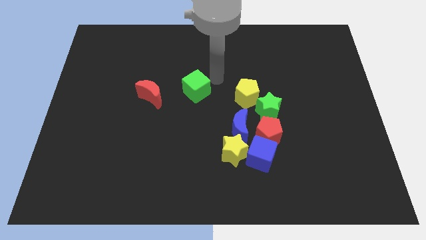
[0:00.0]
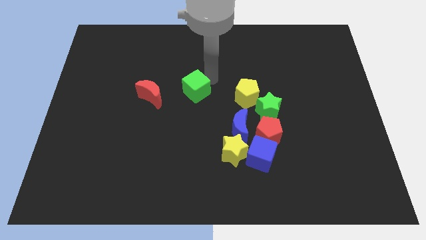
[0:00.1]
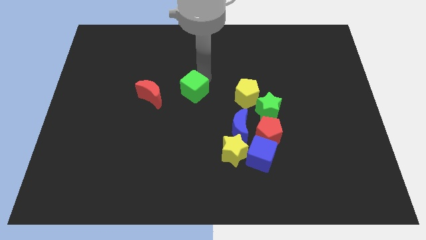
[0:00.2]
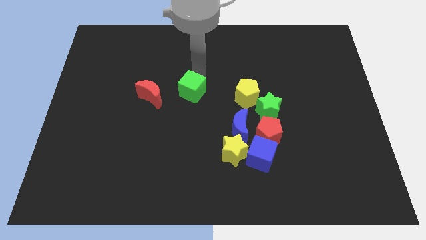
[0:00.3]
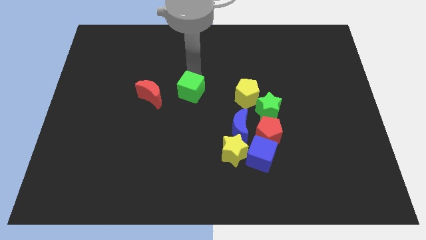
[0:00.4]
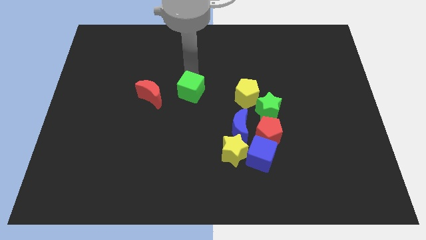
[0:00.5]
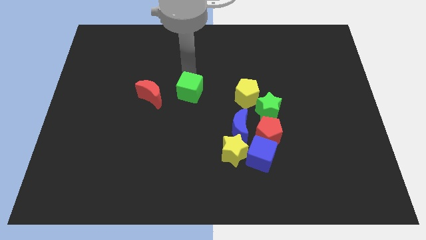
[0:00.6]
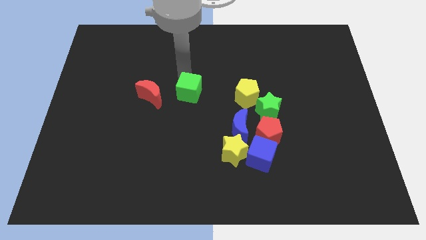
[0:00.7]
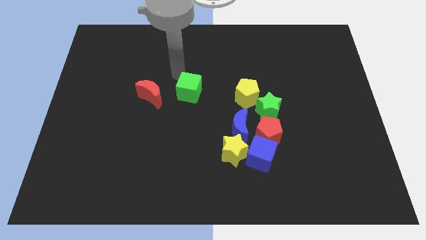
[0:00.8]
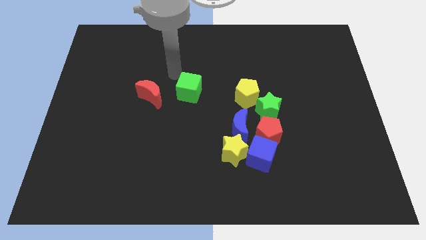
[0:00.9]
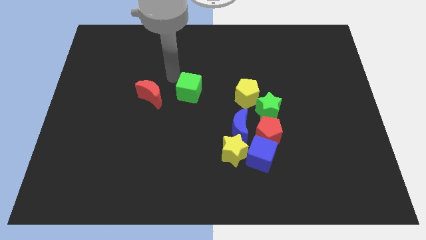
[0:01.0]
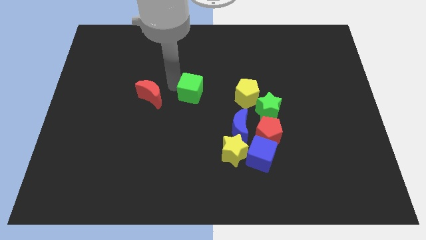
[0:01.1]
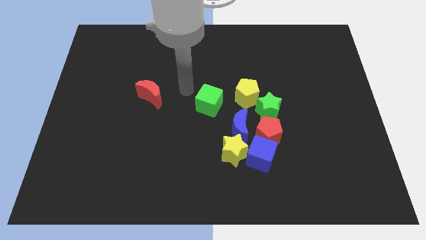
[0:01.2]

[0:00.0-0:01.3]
move the green cube to the right of the red crescent

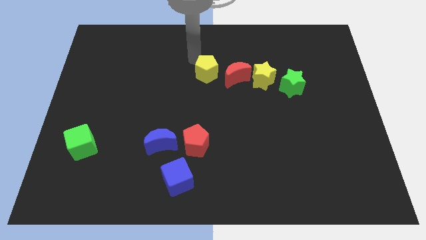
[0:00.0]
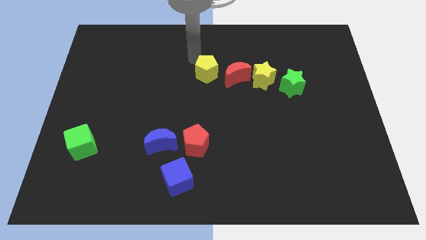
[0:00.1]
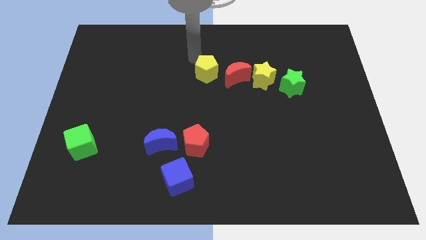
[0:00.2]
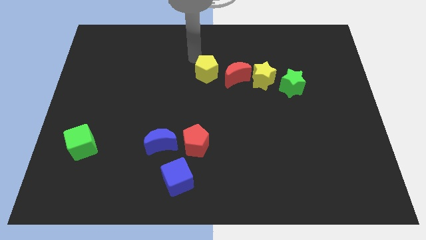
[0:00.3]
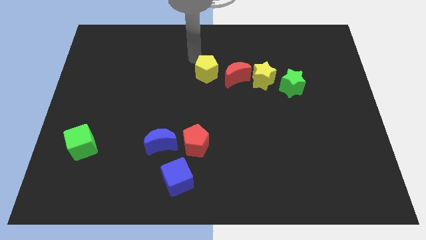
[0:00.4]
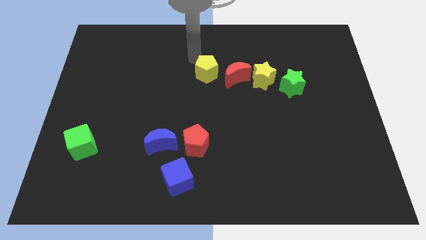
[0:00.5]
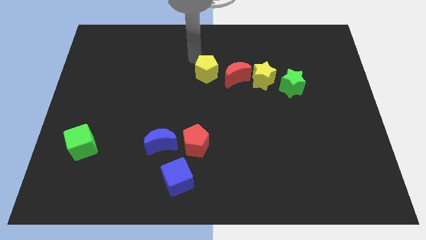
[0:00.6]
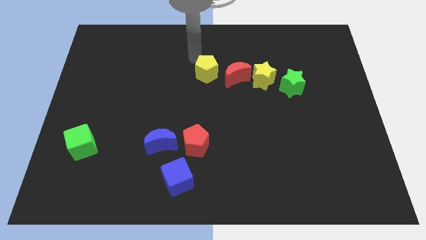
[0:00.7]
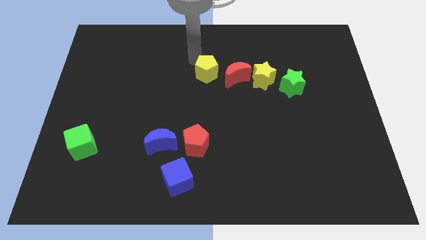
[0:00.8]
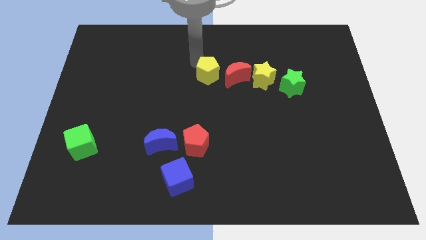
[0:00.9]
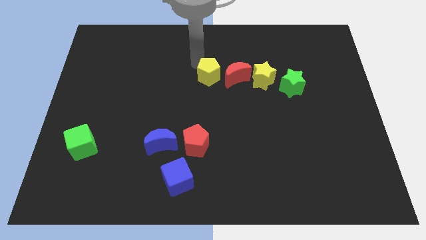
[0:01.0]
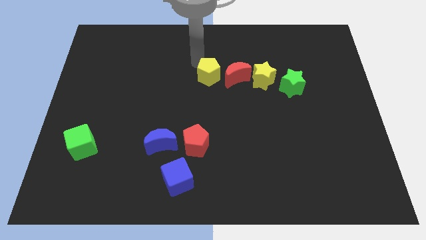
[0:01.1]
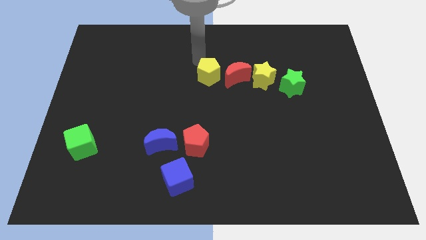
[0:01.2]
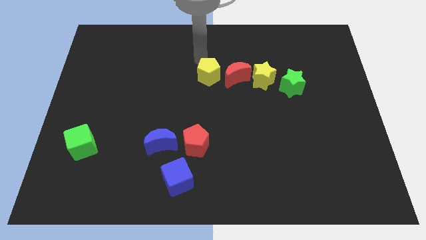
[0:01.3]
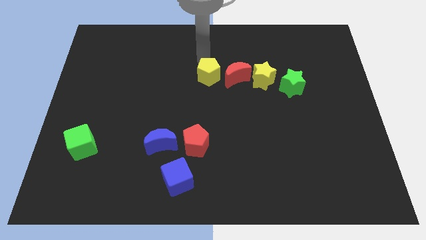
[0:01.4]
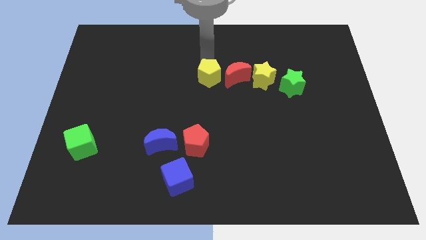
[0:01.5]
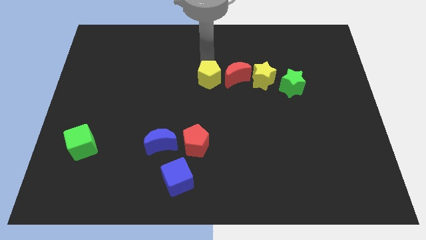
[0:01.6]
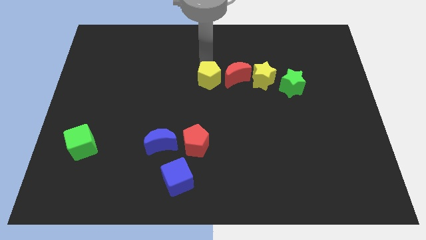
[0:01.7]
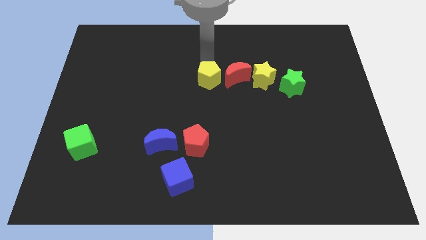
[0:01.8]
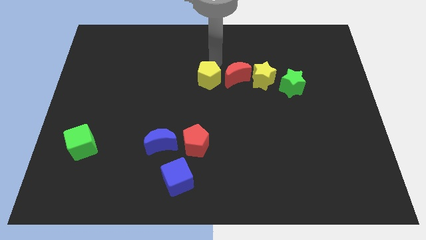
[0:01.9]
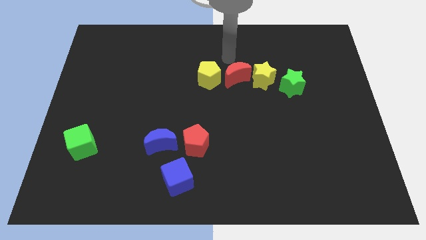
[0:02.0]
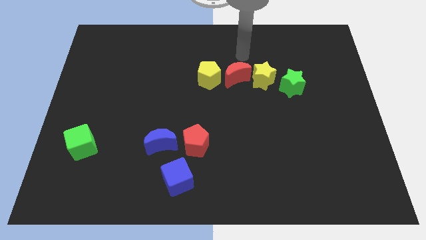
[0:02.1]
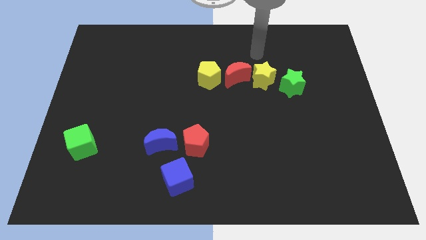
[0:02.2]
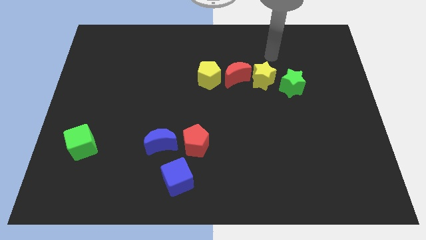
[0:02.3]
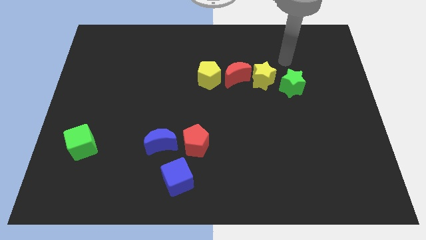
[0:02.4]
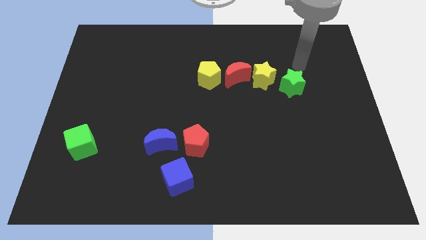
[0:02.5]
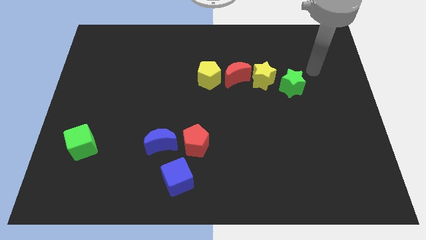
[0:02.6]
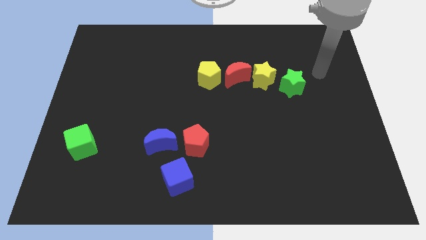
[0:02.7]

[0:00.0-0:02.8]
place the yellow pentagon left to the red moon

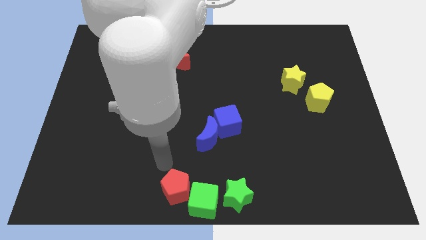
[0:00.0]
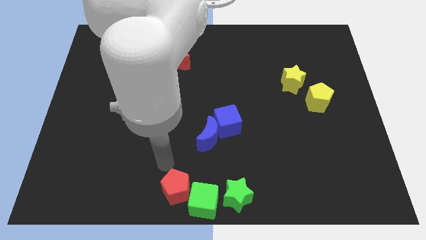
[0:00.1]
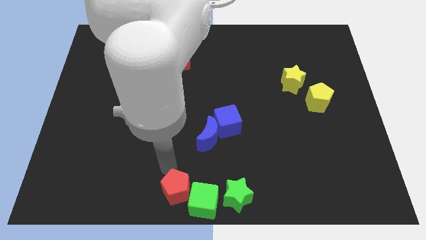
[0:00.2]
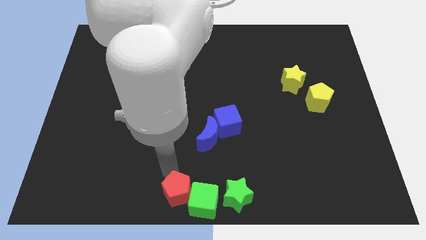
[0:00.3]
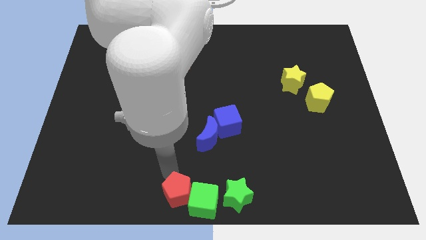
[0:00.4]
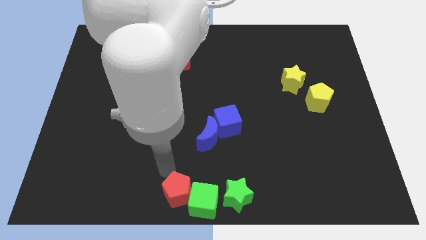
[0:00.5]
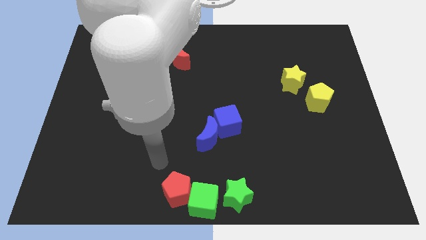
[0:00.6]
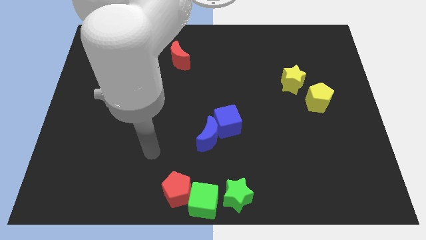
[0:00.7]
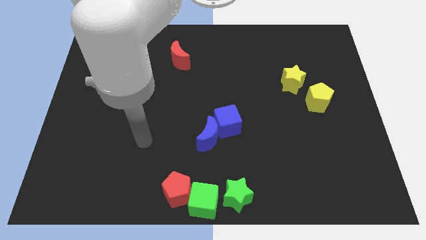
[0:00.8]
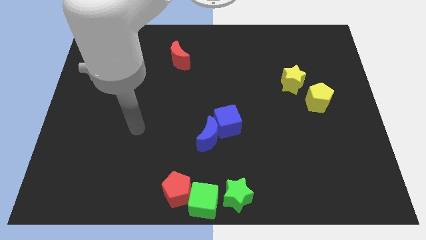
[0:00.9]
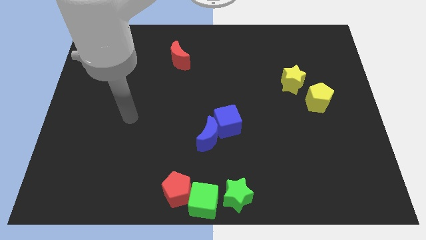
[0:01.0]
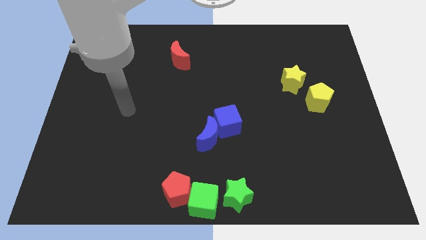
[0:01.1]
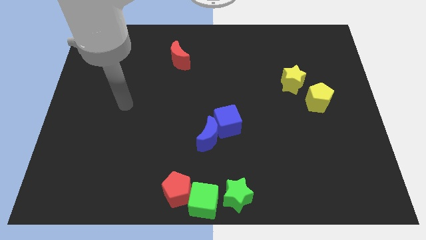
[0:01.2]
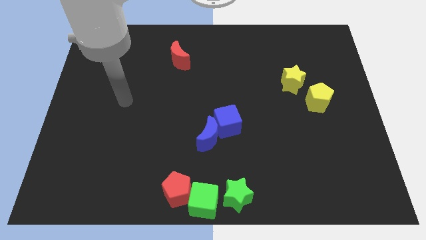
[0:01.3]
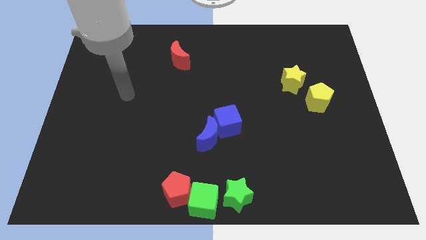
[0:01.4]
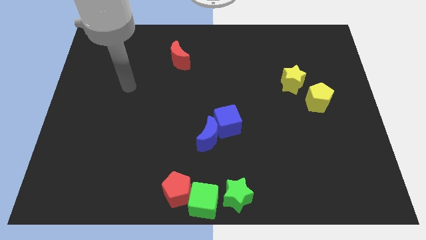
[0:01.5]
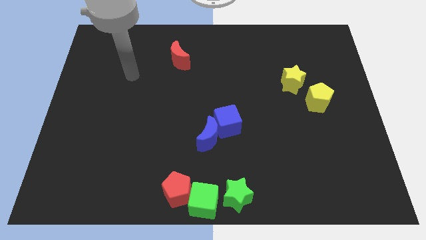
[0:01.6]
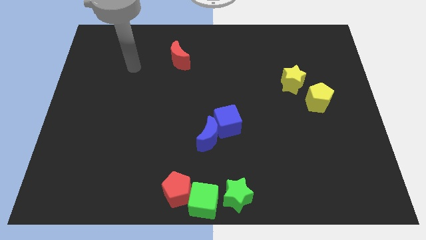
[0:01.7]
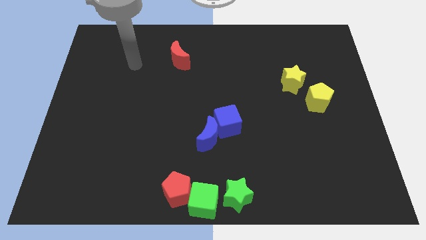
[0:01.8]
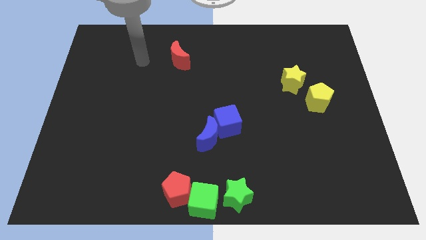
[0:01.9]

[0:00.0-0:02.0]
slightly move red pentagon

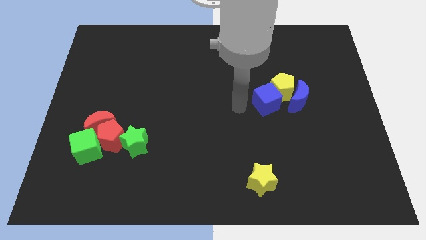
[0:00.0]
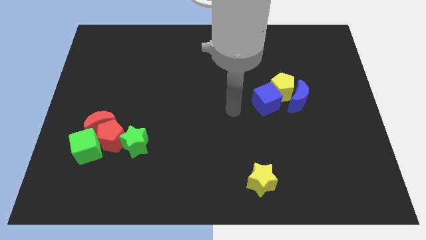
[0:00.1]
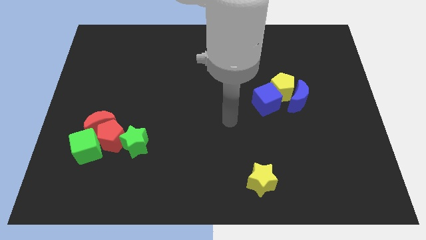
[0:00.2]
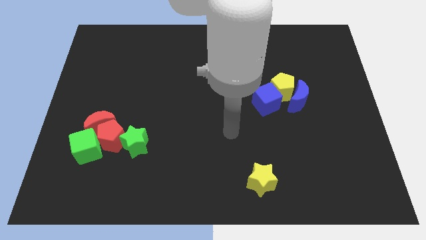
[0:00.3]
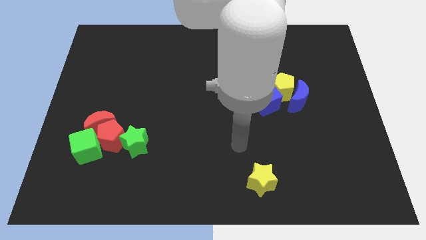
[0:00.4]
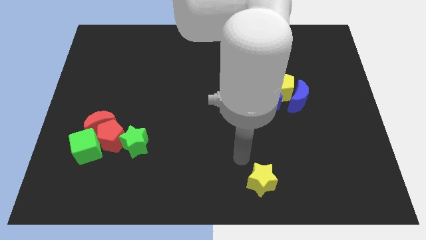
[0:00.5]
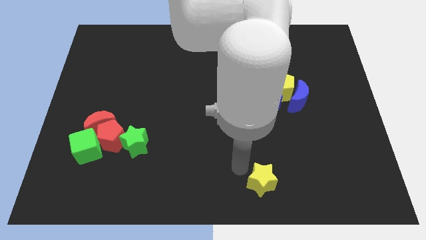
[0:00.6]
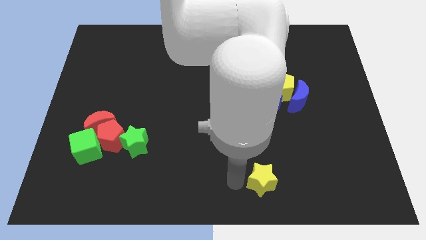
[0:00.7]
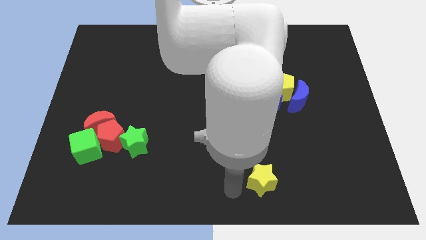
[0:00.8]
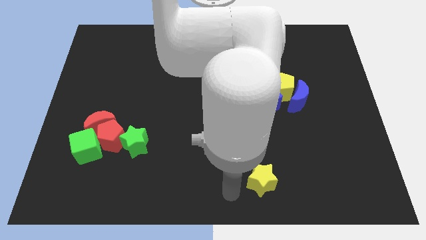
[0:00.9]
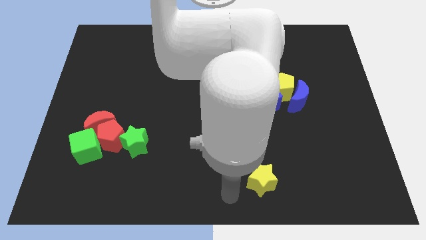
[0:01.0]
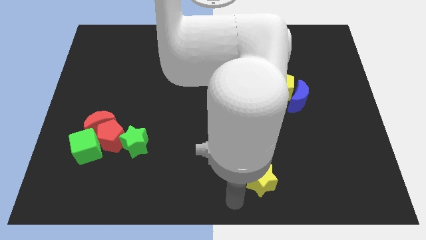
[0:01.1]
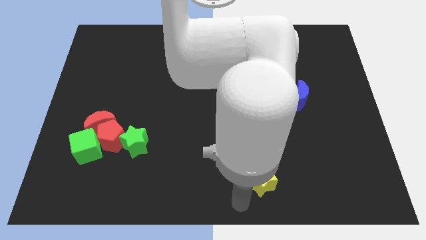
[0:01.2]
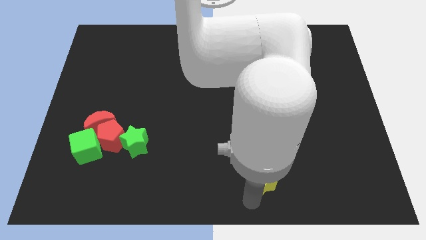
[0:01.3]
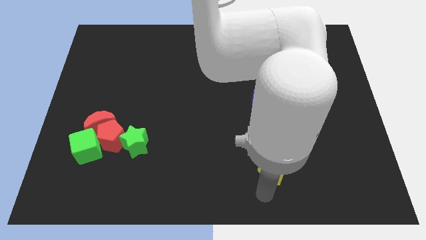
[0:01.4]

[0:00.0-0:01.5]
move your arm to the bottom side of the yellow star

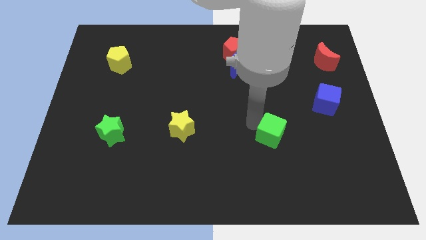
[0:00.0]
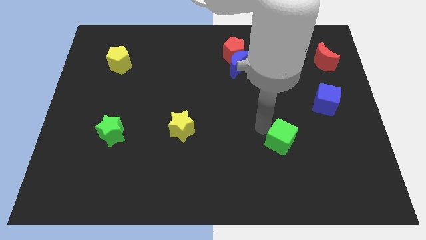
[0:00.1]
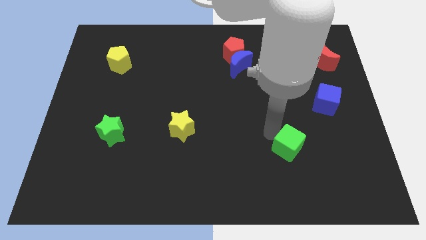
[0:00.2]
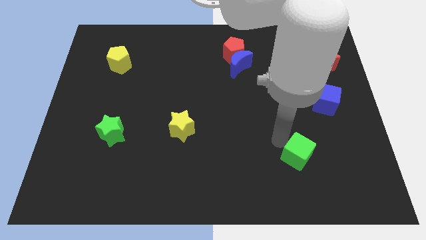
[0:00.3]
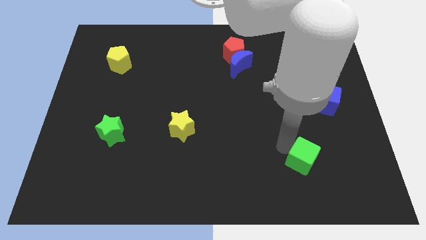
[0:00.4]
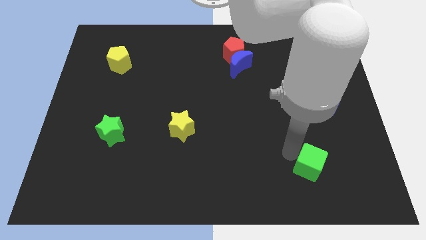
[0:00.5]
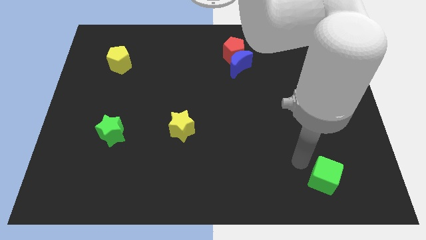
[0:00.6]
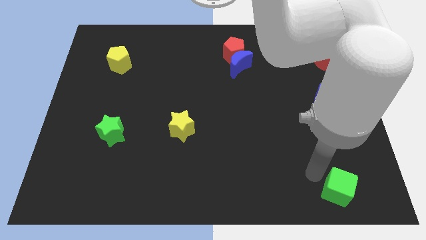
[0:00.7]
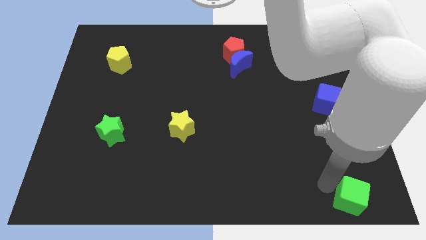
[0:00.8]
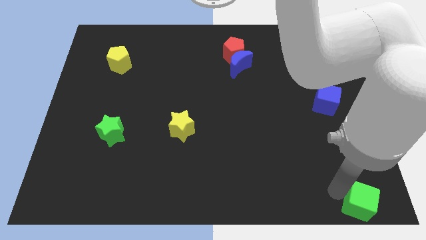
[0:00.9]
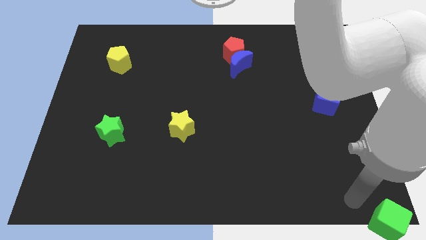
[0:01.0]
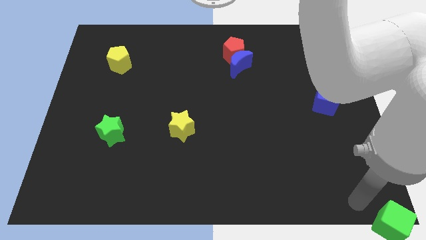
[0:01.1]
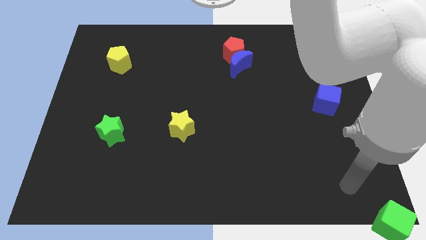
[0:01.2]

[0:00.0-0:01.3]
push the green cube to the bottom right corner of the board

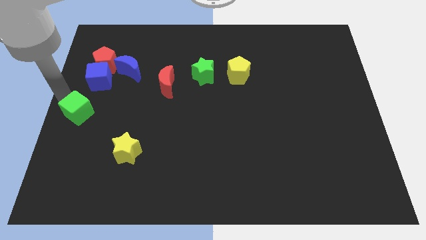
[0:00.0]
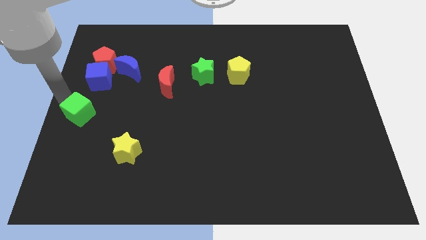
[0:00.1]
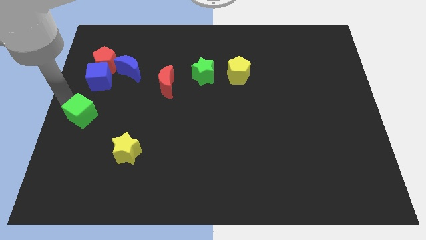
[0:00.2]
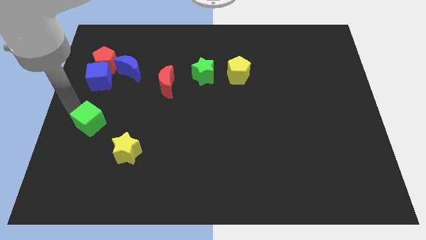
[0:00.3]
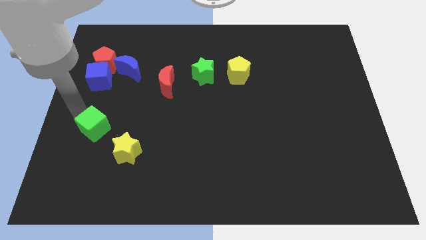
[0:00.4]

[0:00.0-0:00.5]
push green cube below blue cube
